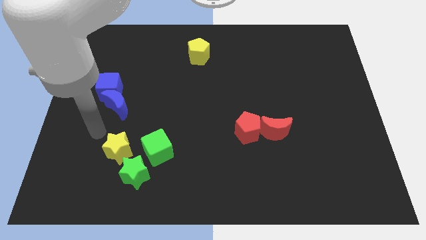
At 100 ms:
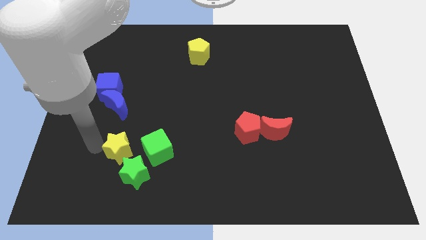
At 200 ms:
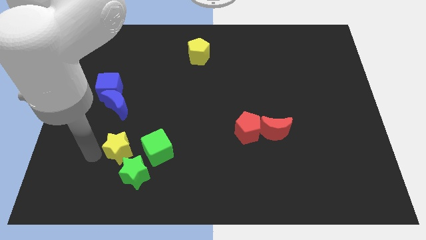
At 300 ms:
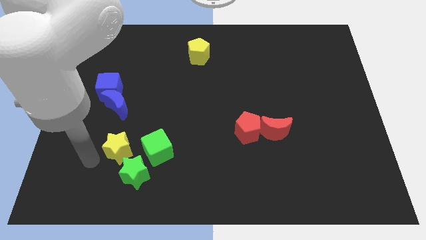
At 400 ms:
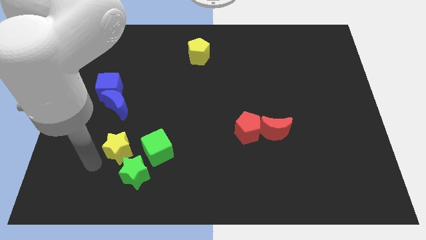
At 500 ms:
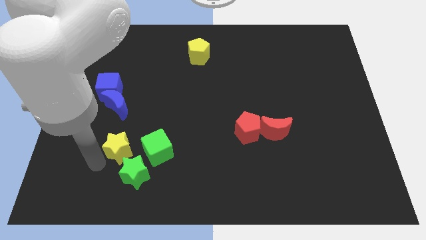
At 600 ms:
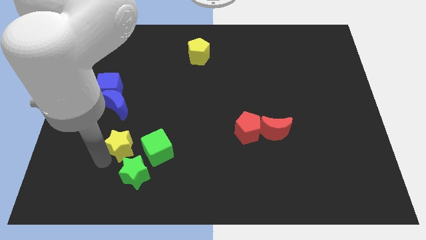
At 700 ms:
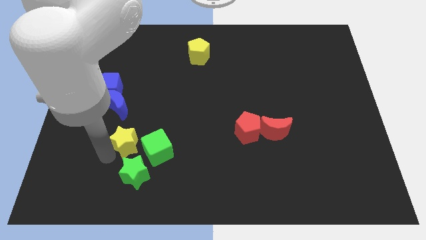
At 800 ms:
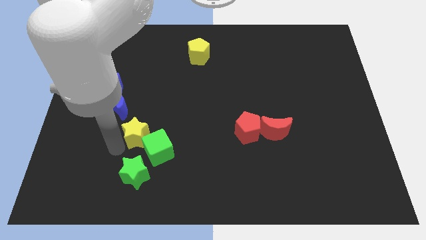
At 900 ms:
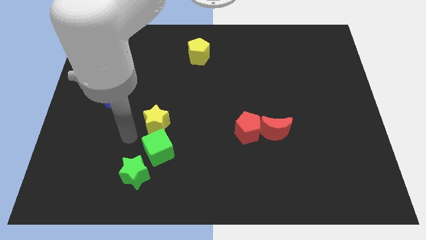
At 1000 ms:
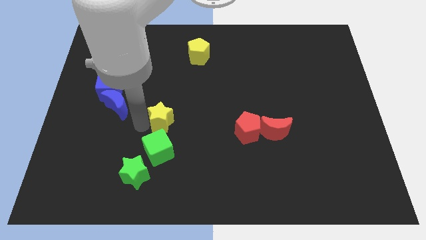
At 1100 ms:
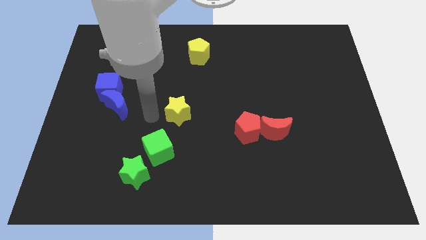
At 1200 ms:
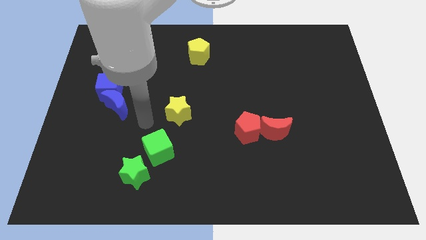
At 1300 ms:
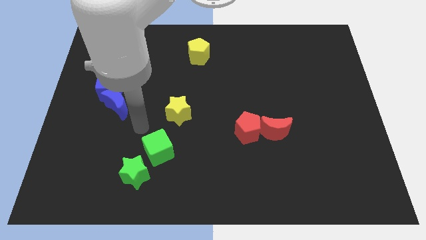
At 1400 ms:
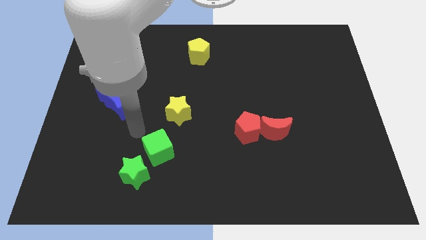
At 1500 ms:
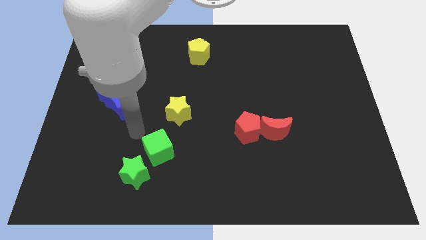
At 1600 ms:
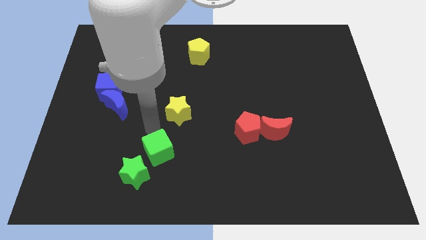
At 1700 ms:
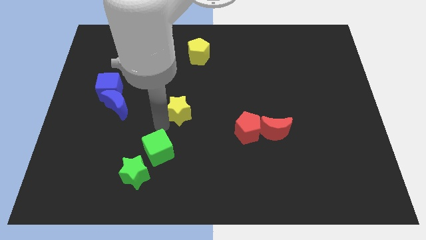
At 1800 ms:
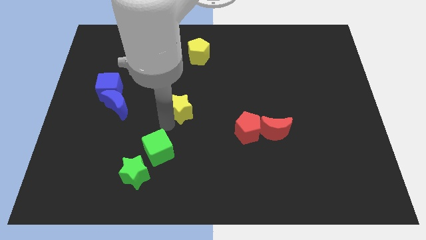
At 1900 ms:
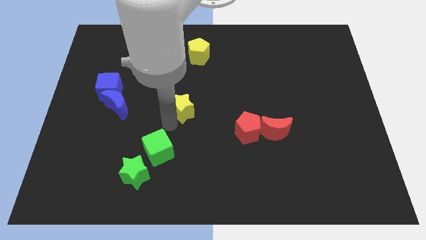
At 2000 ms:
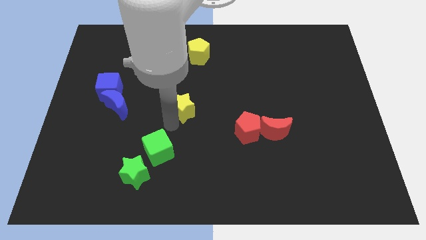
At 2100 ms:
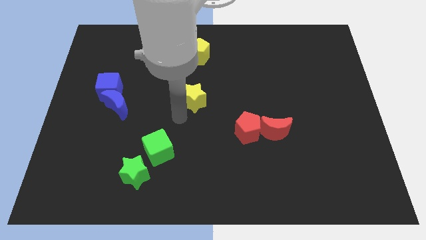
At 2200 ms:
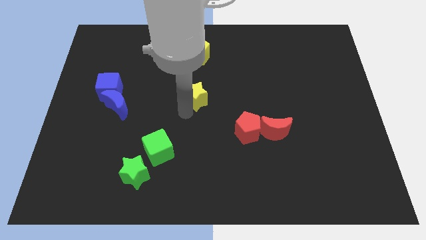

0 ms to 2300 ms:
push the yellow star to the right of the group of blue blocks

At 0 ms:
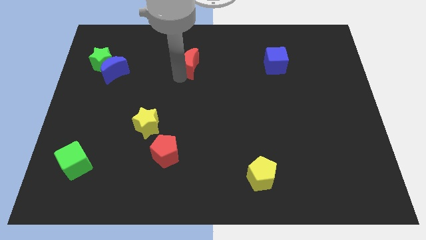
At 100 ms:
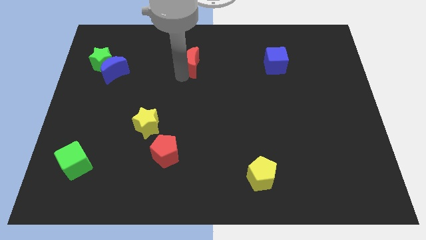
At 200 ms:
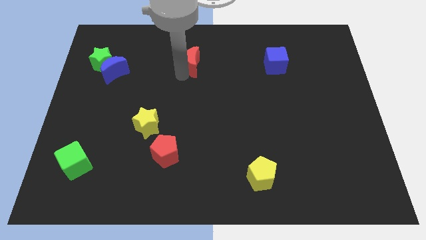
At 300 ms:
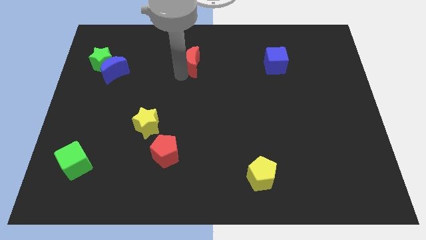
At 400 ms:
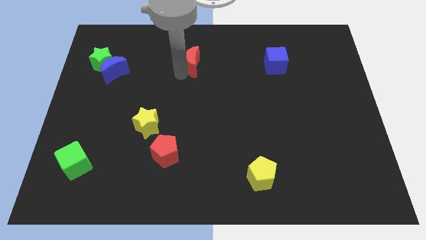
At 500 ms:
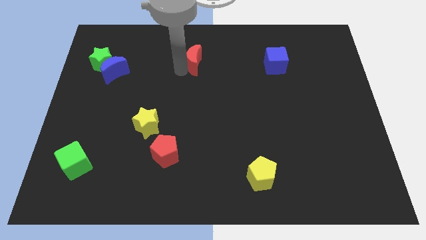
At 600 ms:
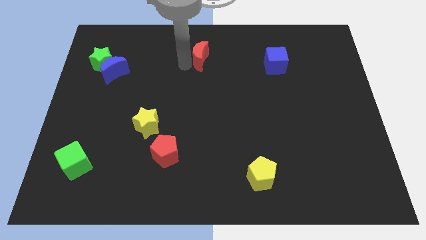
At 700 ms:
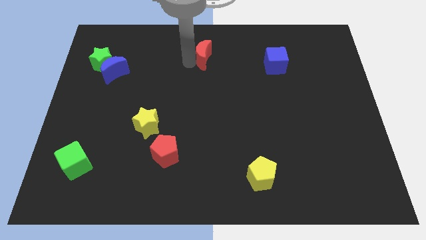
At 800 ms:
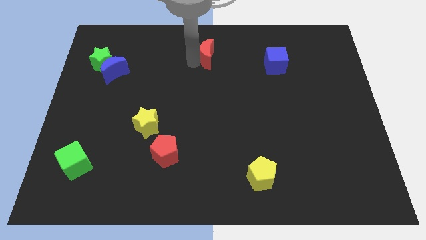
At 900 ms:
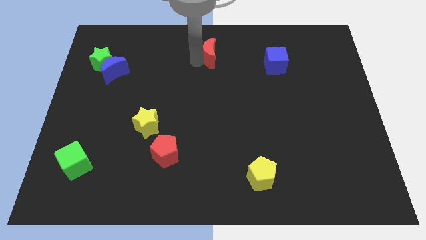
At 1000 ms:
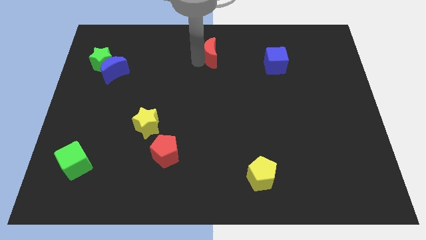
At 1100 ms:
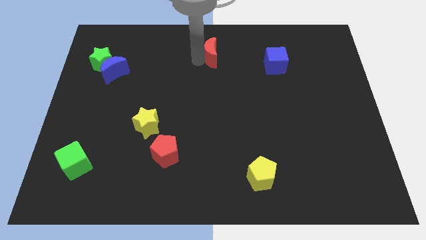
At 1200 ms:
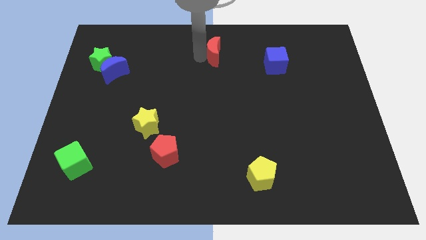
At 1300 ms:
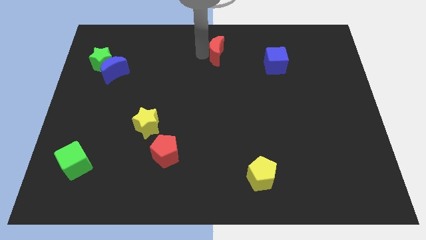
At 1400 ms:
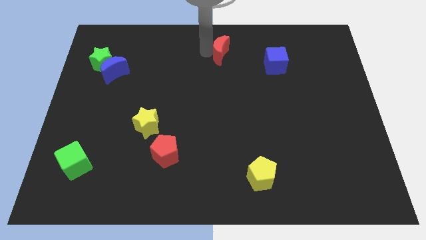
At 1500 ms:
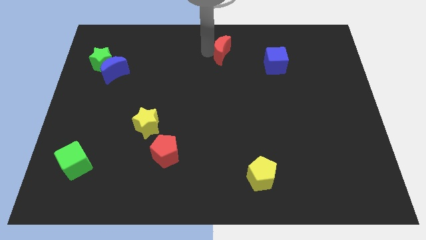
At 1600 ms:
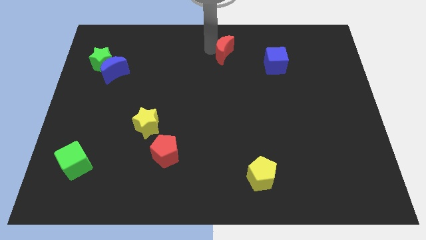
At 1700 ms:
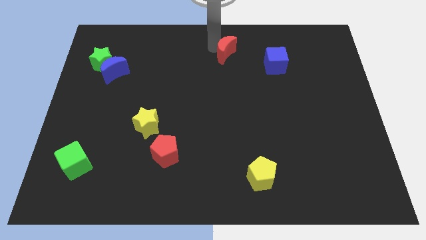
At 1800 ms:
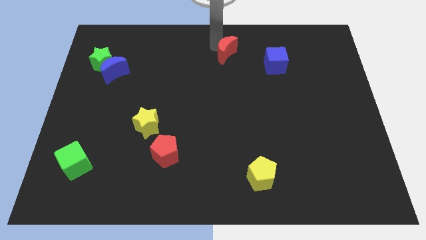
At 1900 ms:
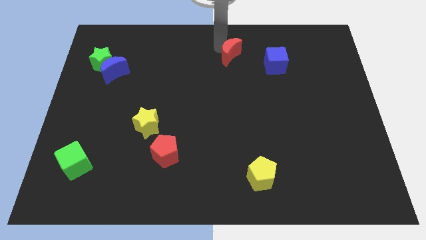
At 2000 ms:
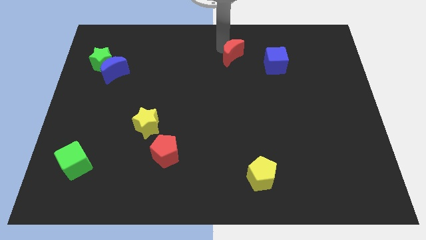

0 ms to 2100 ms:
push the red crescent towards the blue cube

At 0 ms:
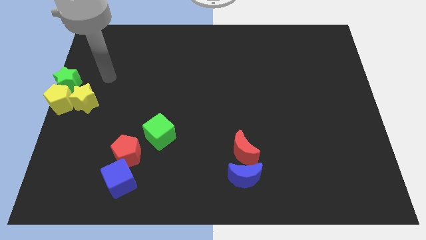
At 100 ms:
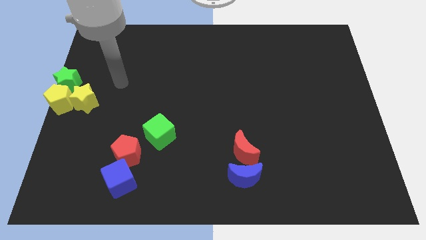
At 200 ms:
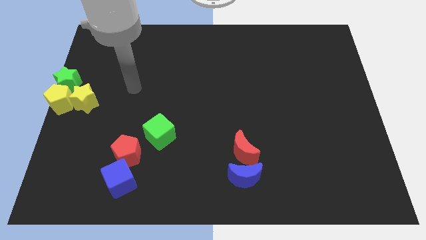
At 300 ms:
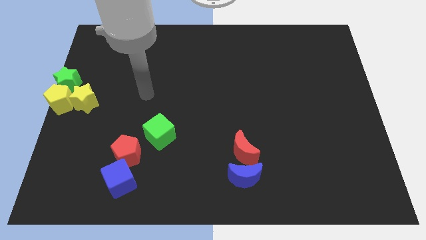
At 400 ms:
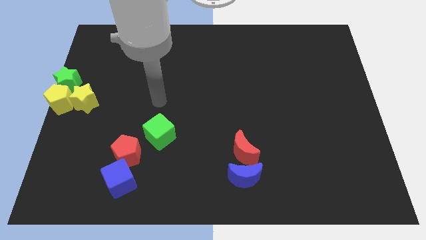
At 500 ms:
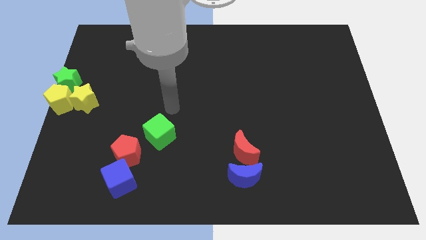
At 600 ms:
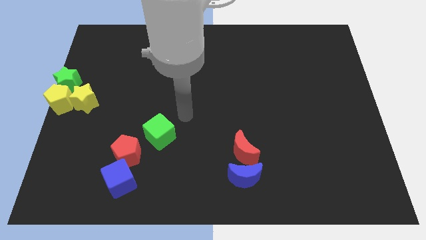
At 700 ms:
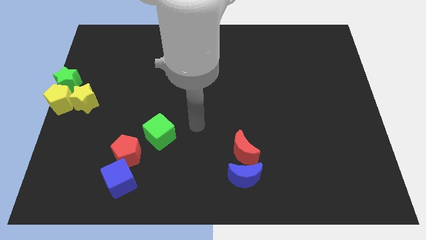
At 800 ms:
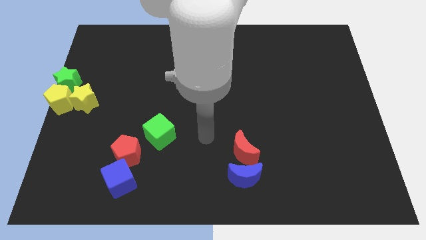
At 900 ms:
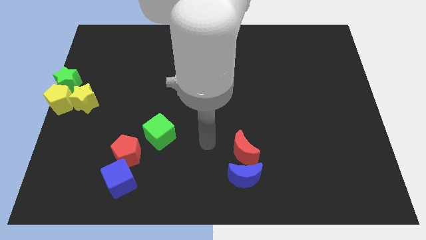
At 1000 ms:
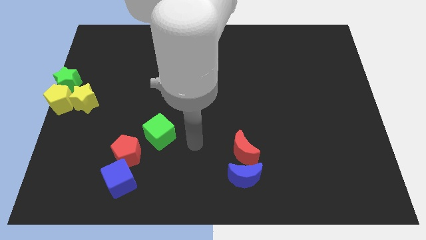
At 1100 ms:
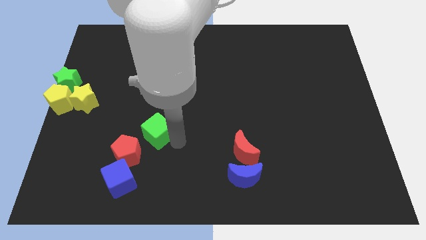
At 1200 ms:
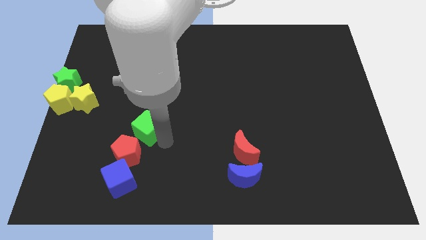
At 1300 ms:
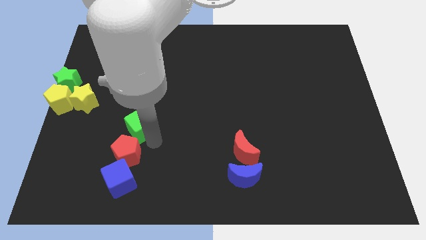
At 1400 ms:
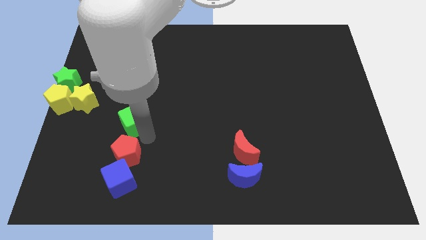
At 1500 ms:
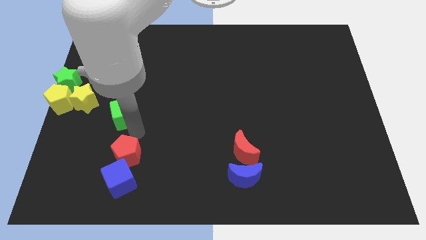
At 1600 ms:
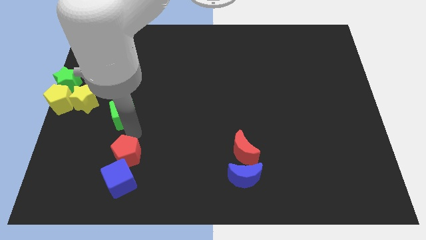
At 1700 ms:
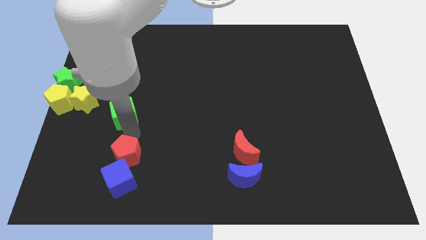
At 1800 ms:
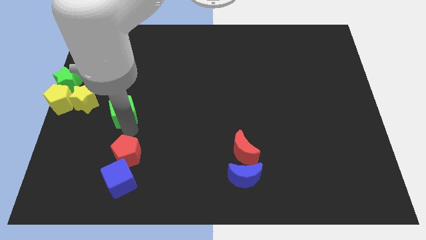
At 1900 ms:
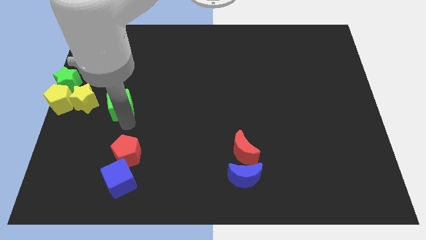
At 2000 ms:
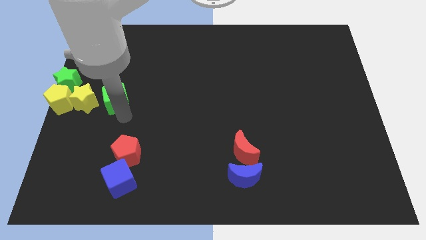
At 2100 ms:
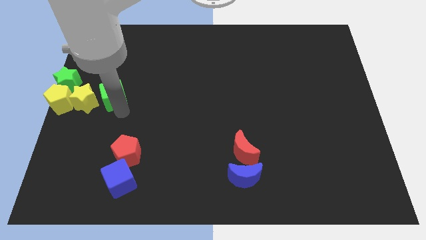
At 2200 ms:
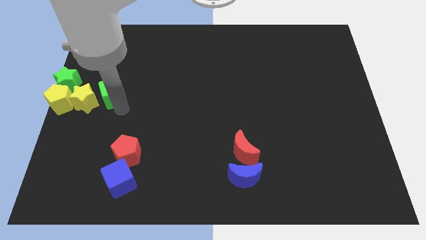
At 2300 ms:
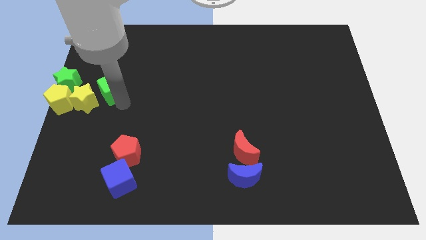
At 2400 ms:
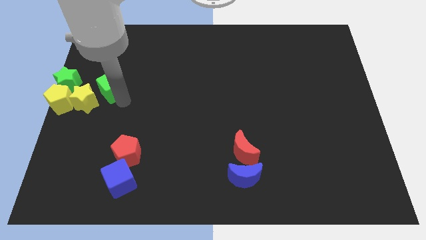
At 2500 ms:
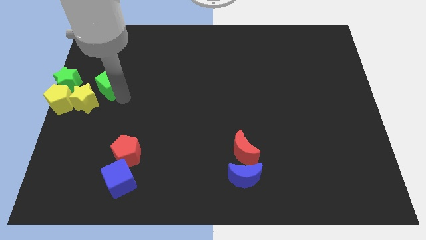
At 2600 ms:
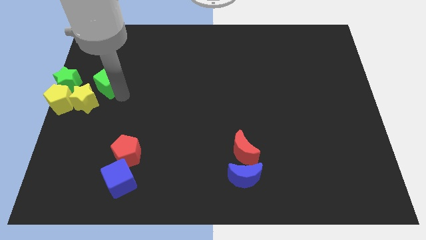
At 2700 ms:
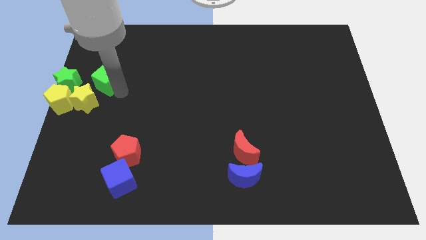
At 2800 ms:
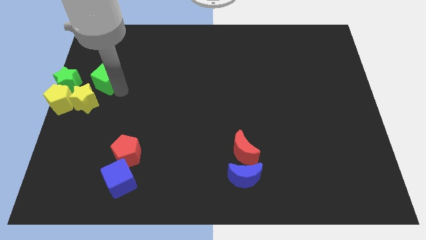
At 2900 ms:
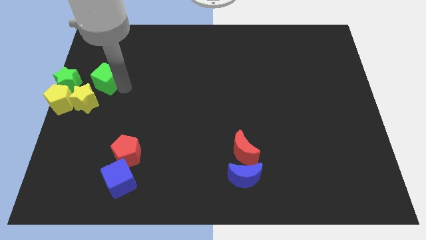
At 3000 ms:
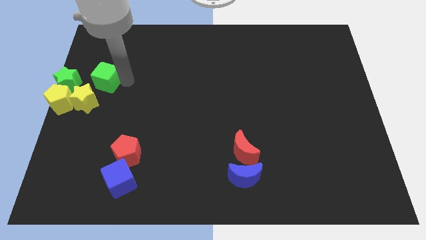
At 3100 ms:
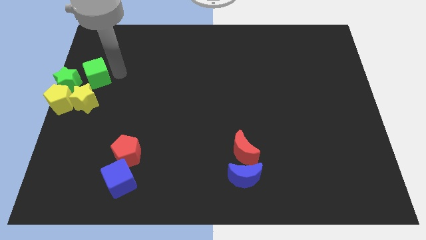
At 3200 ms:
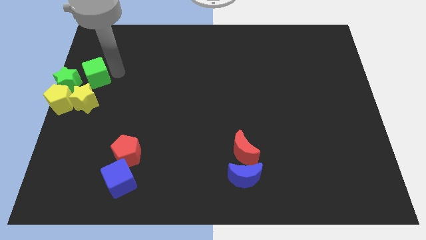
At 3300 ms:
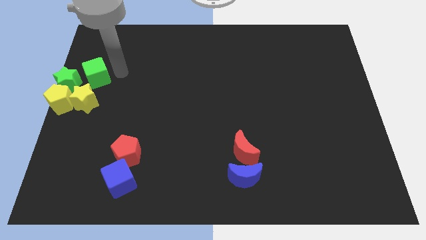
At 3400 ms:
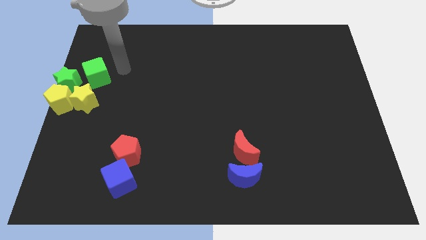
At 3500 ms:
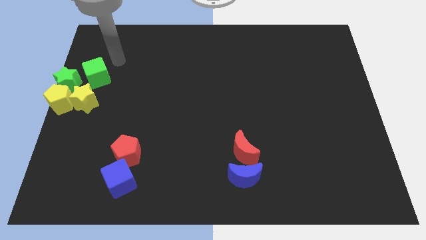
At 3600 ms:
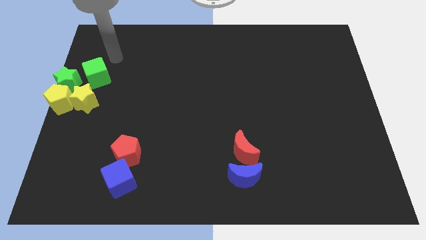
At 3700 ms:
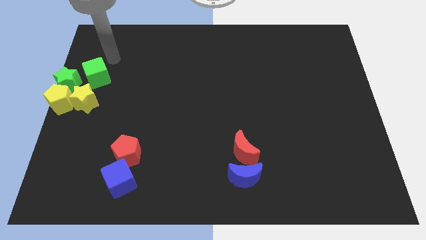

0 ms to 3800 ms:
push the green cube to the right of the green star

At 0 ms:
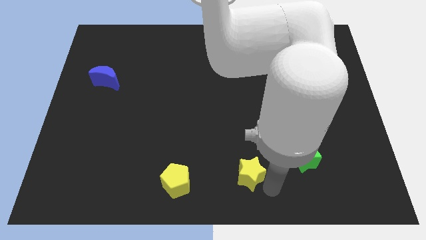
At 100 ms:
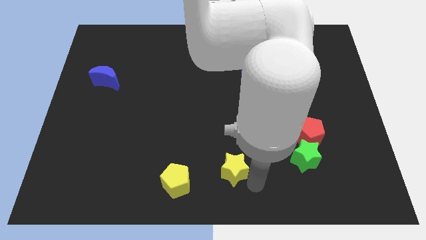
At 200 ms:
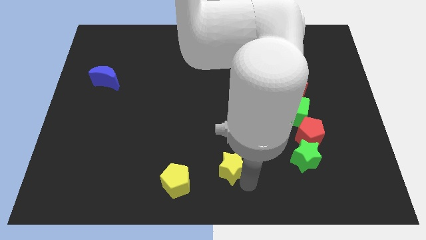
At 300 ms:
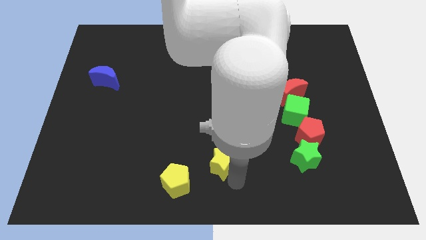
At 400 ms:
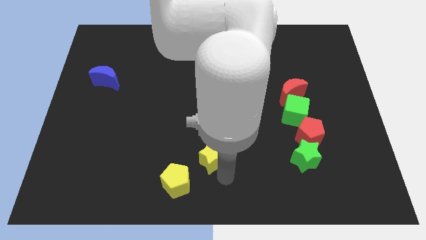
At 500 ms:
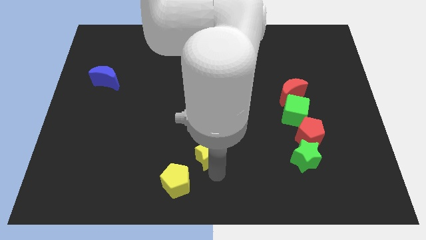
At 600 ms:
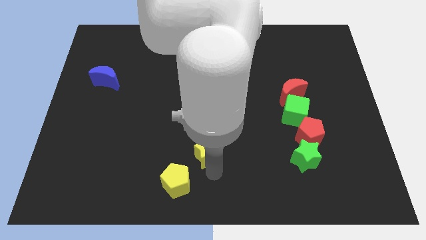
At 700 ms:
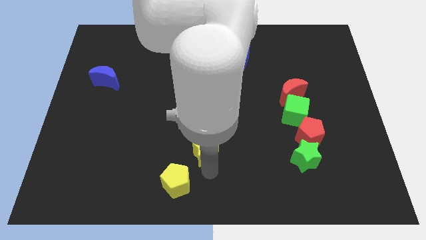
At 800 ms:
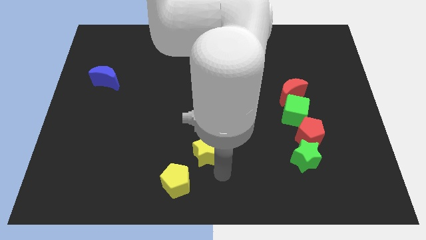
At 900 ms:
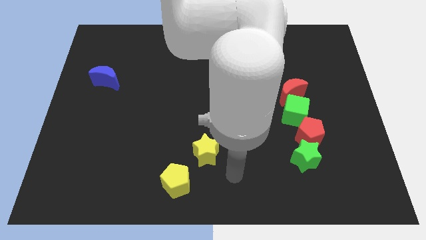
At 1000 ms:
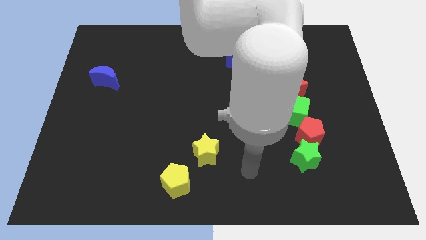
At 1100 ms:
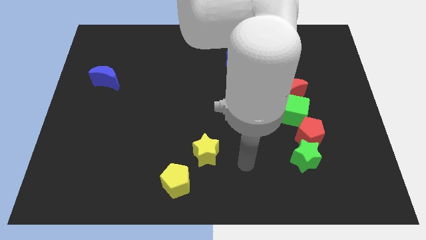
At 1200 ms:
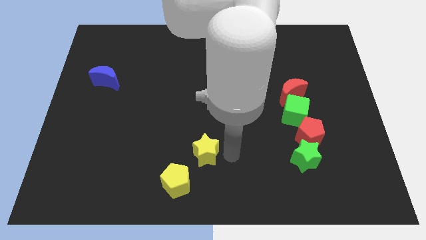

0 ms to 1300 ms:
push yellow star upwards
